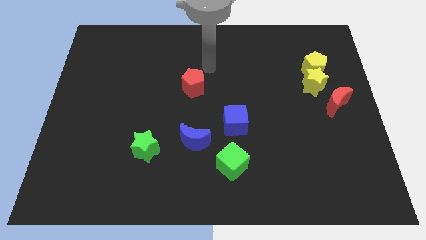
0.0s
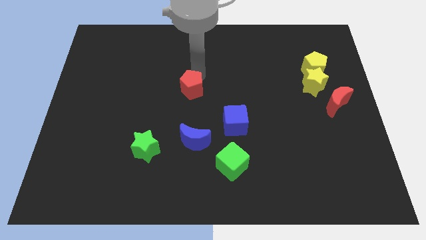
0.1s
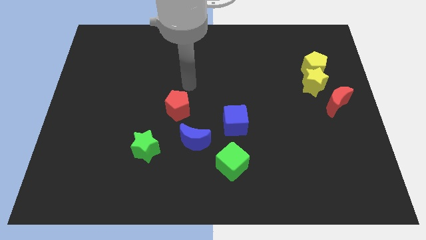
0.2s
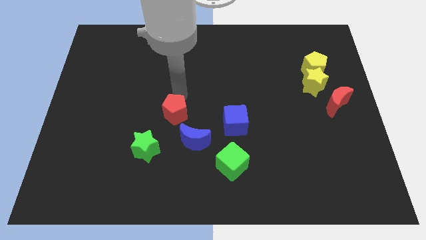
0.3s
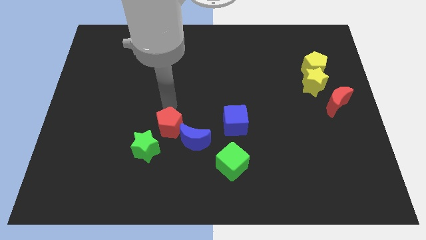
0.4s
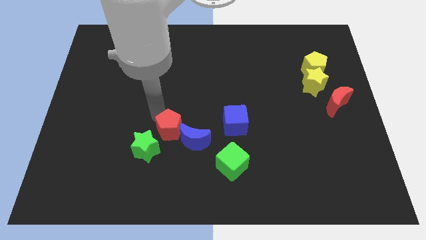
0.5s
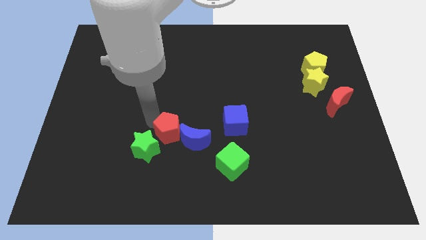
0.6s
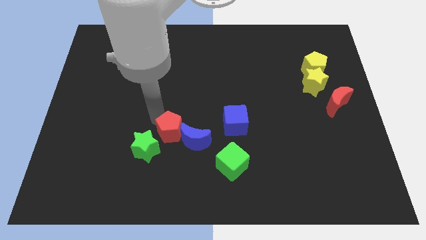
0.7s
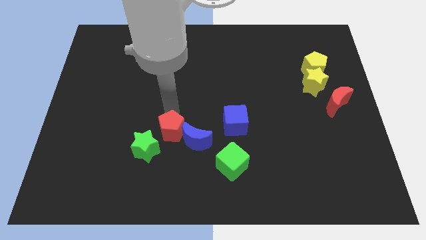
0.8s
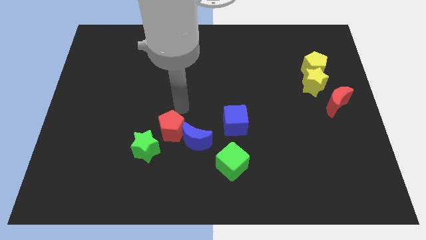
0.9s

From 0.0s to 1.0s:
place the red pentagon left ot he blue moon

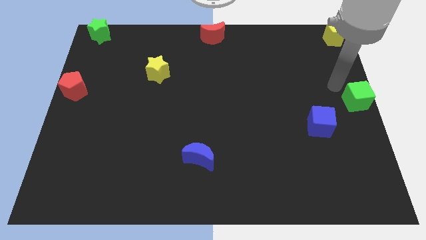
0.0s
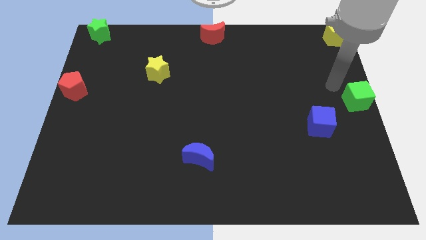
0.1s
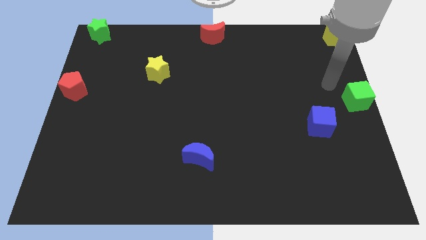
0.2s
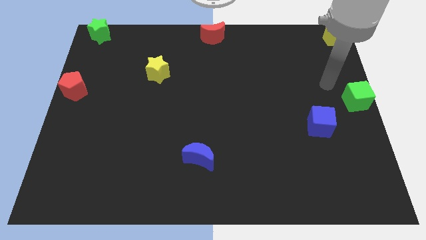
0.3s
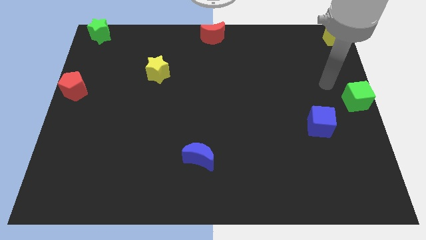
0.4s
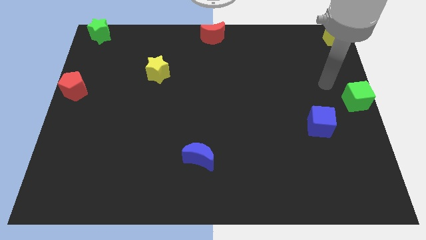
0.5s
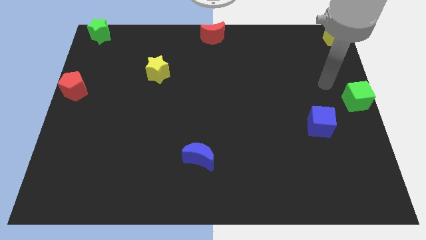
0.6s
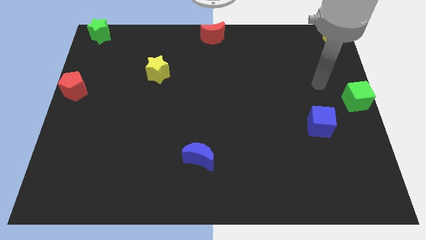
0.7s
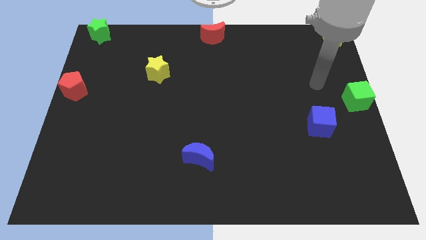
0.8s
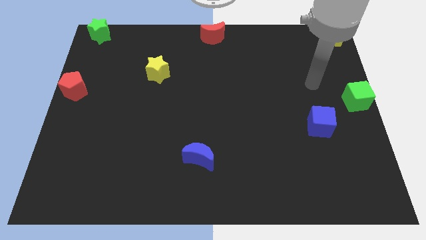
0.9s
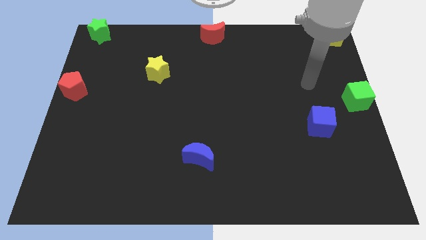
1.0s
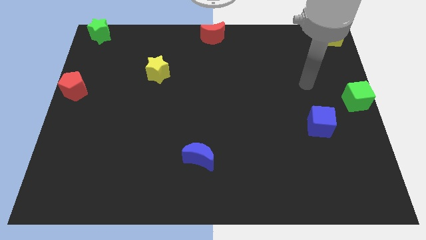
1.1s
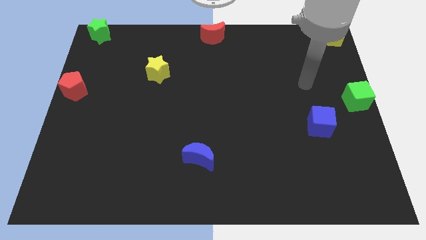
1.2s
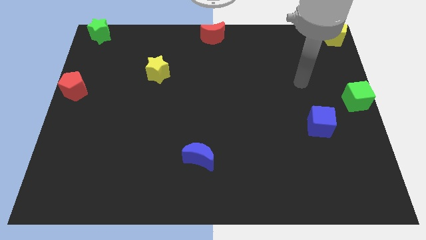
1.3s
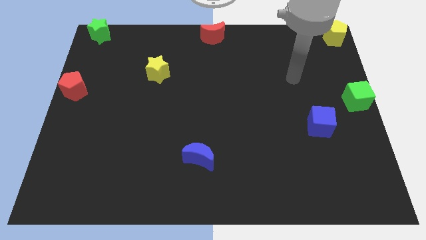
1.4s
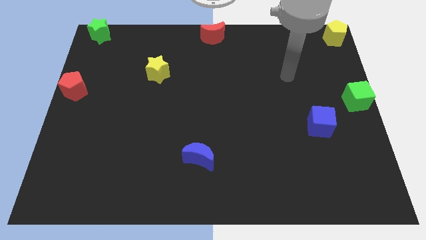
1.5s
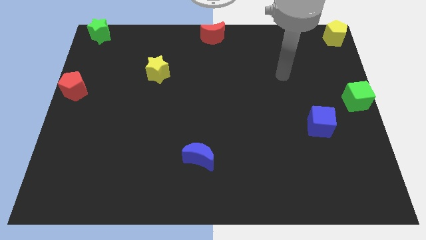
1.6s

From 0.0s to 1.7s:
move the arm away from the green cube

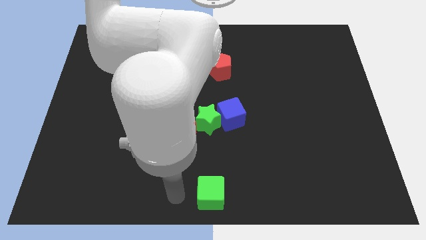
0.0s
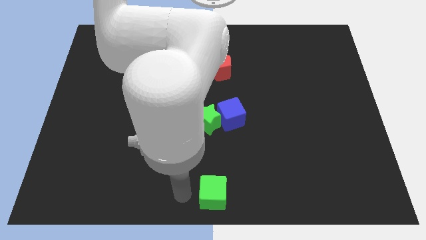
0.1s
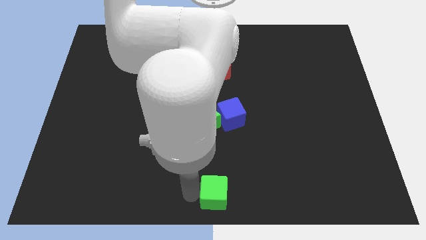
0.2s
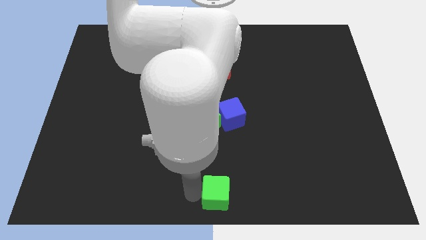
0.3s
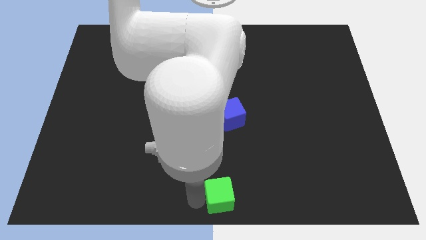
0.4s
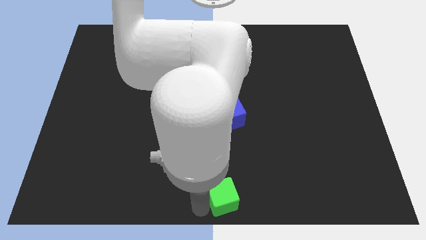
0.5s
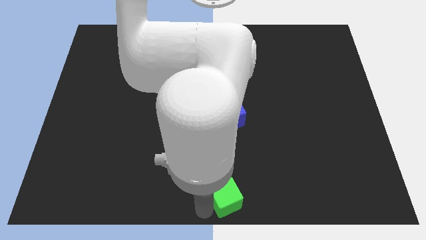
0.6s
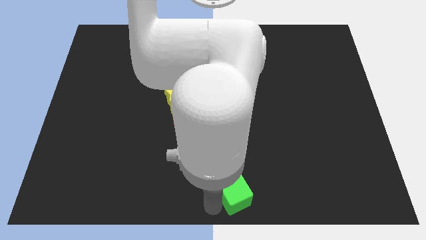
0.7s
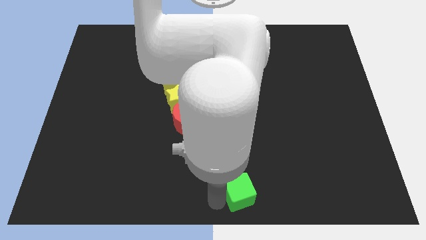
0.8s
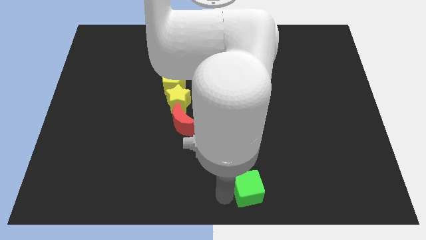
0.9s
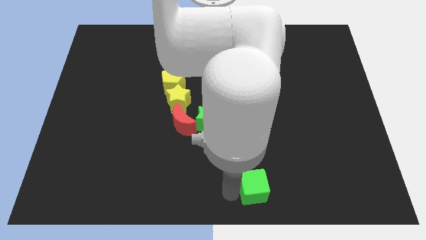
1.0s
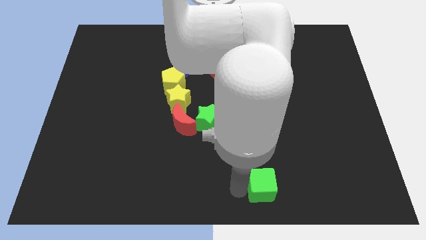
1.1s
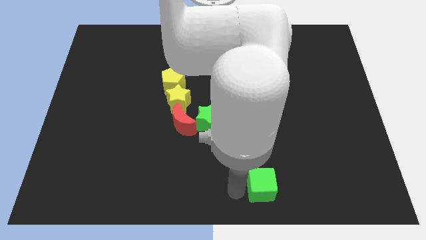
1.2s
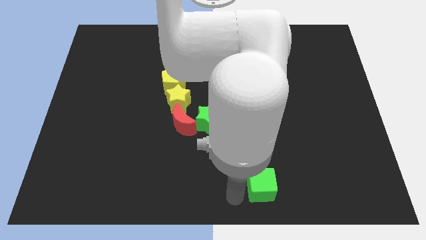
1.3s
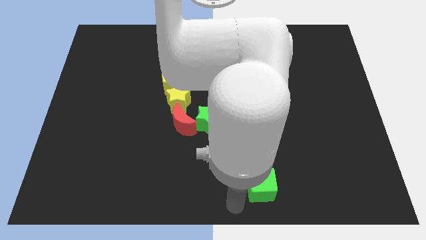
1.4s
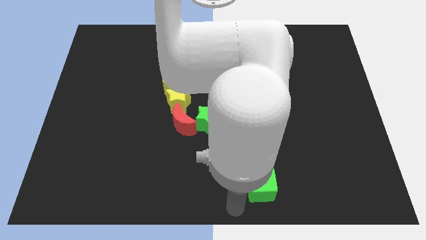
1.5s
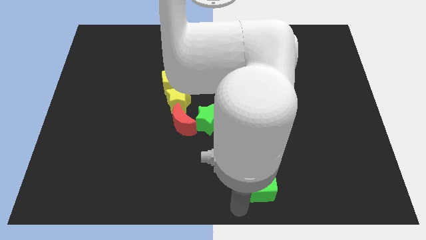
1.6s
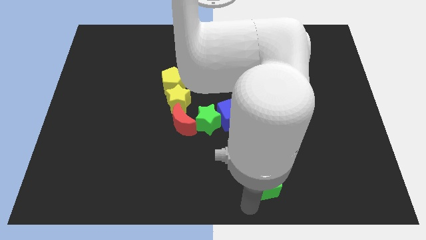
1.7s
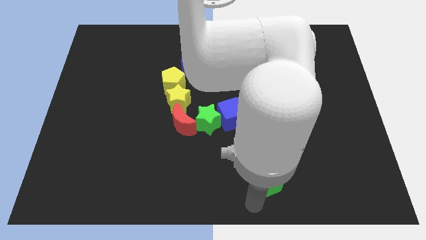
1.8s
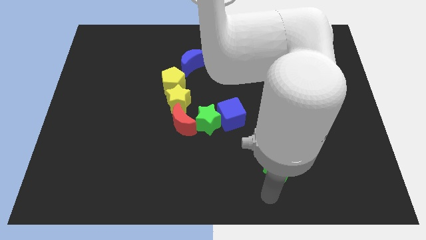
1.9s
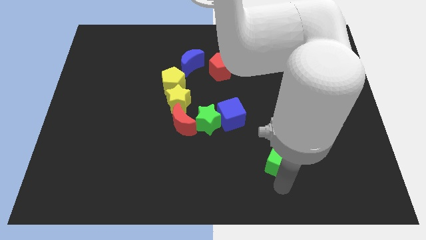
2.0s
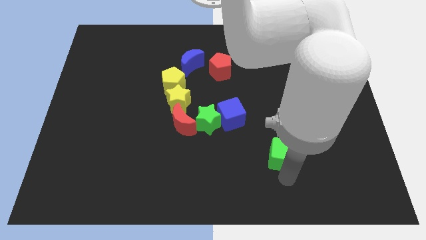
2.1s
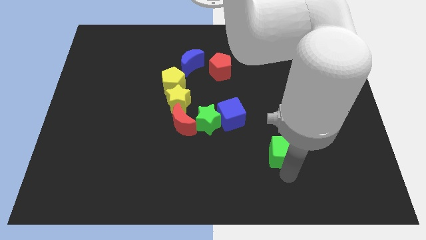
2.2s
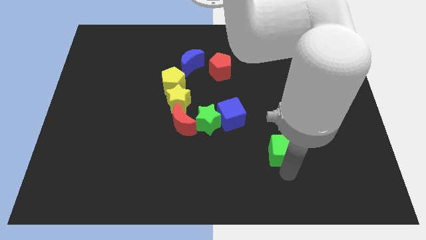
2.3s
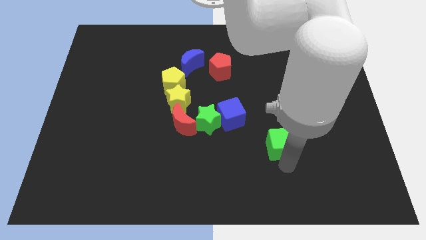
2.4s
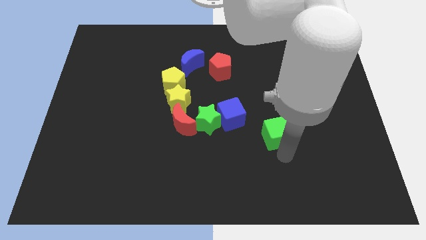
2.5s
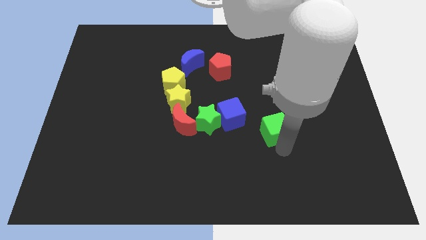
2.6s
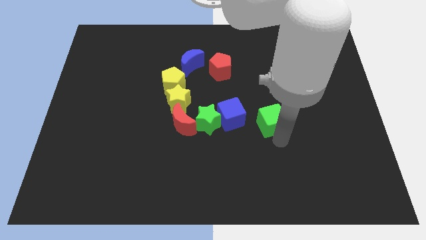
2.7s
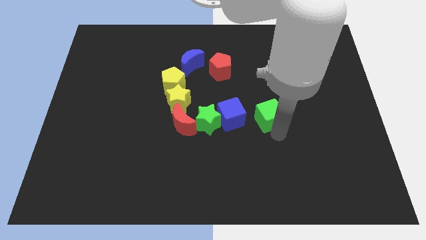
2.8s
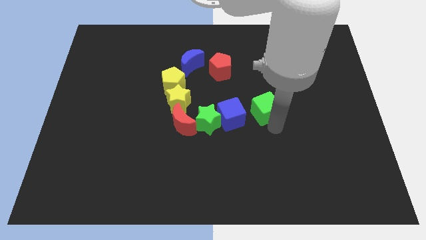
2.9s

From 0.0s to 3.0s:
place green cube to the right of blue cube

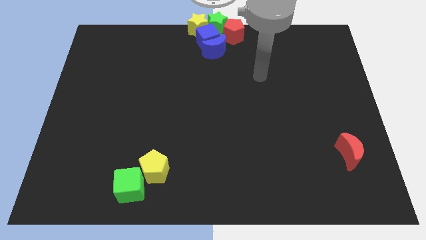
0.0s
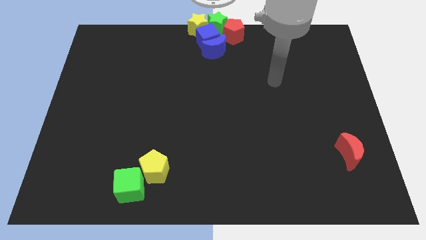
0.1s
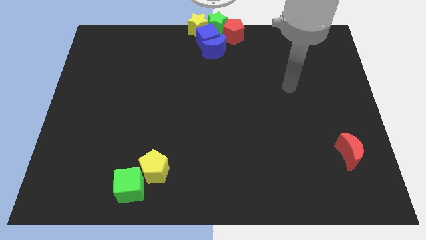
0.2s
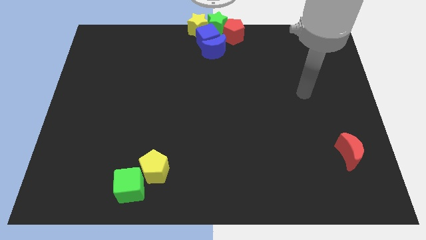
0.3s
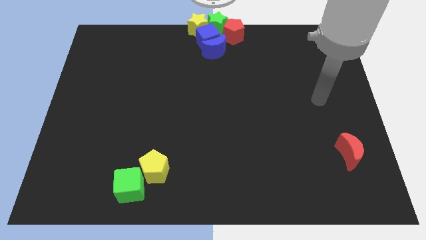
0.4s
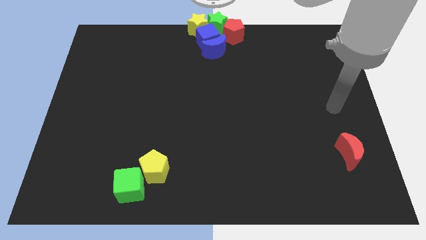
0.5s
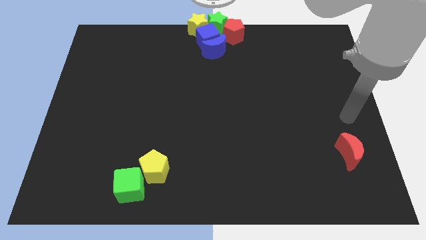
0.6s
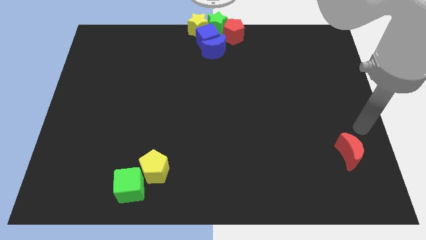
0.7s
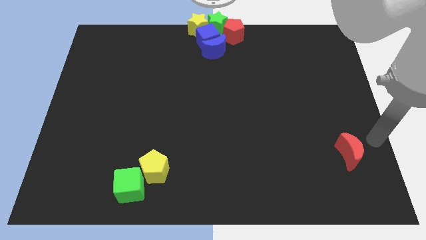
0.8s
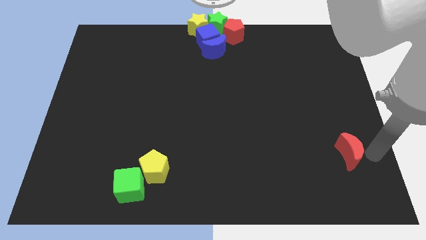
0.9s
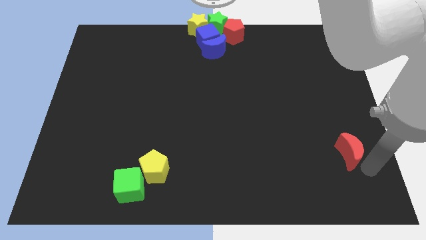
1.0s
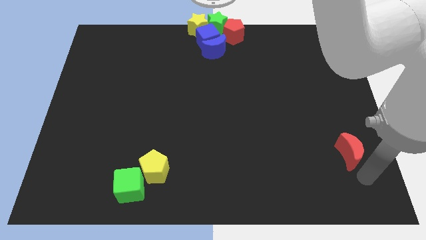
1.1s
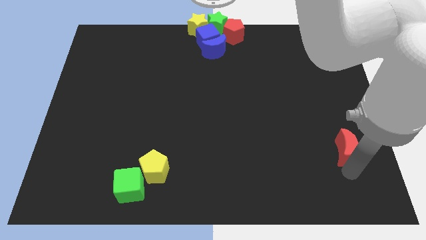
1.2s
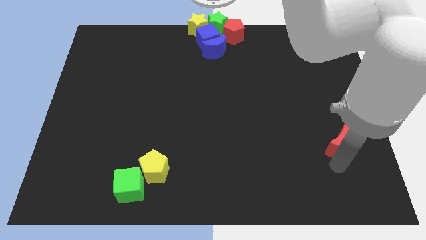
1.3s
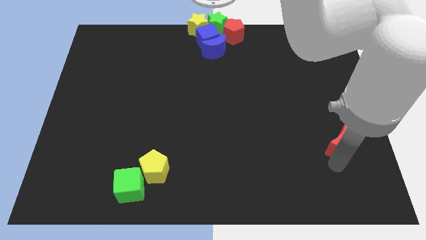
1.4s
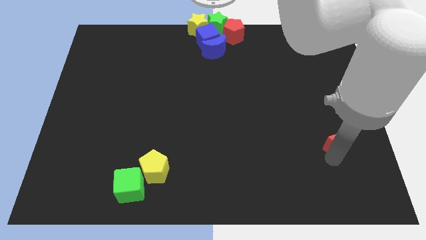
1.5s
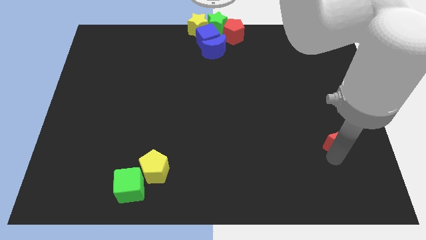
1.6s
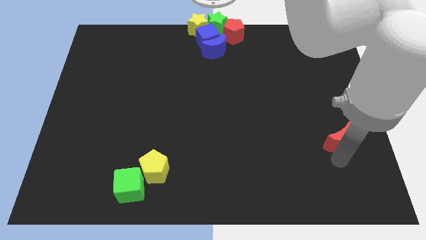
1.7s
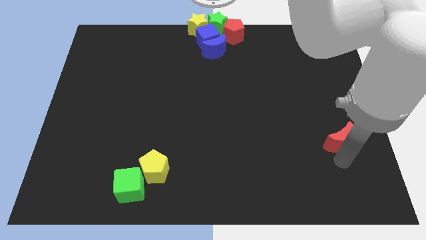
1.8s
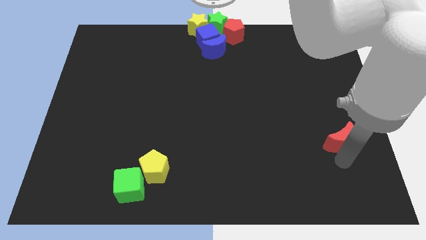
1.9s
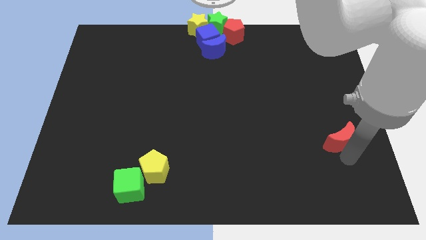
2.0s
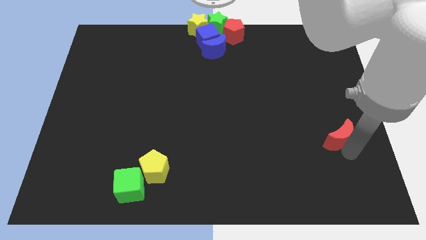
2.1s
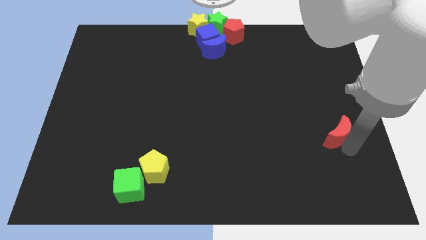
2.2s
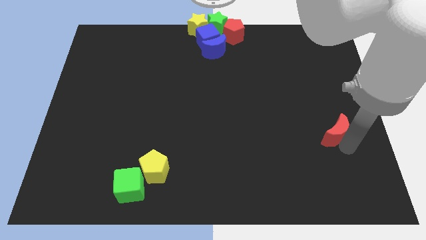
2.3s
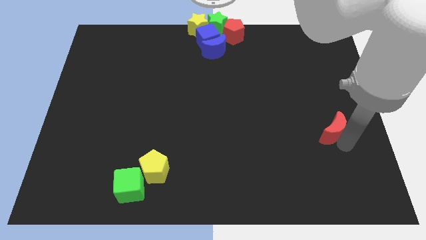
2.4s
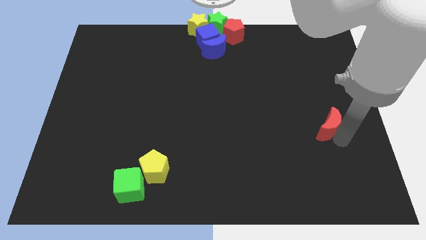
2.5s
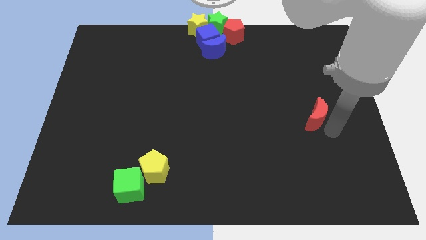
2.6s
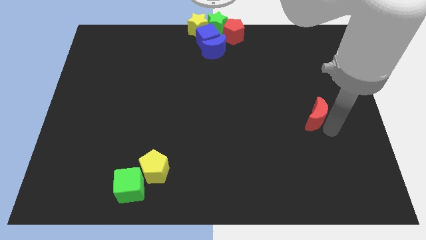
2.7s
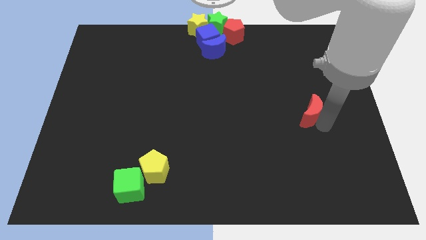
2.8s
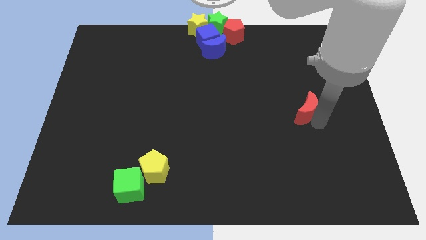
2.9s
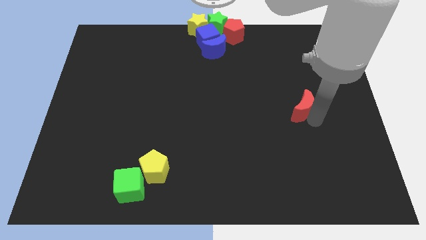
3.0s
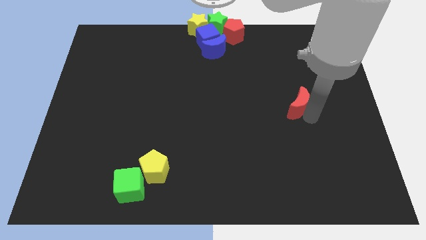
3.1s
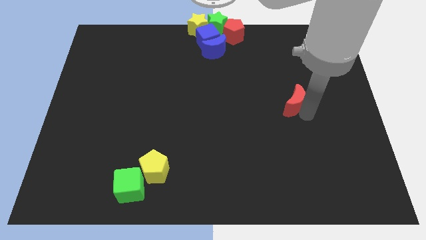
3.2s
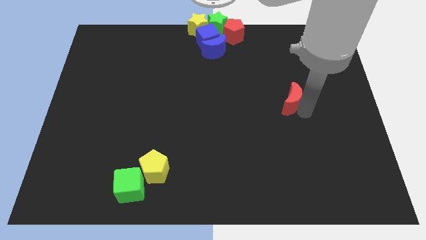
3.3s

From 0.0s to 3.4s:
push the red crescent to the bottom right of the red pentagon
